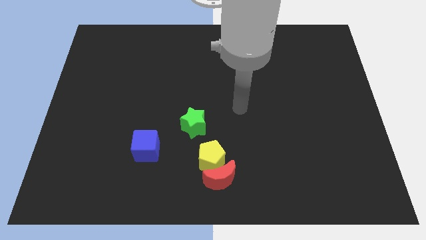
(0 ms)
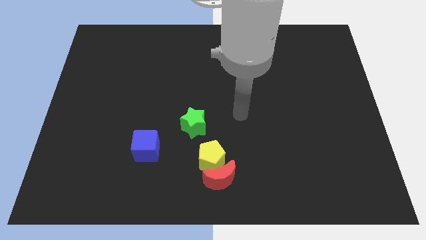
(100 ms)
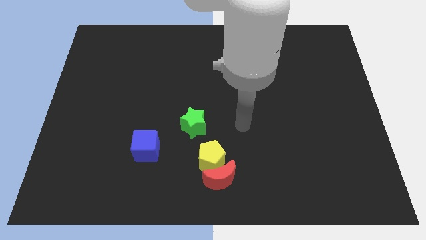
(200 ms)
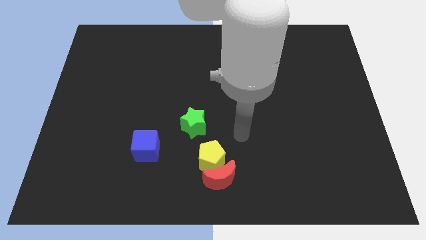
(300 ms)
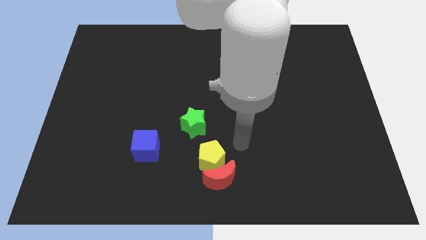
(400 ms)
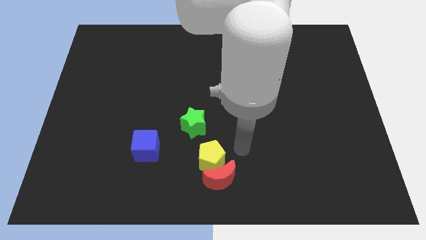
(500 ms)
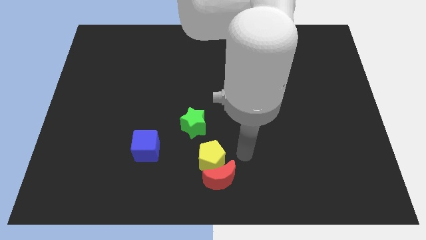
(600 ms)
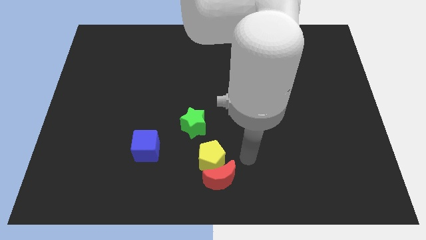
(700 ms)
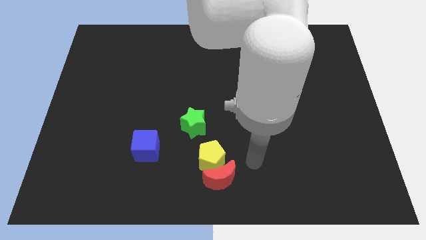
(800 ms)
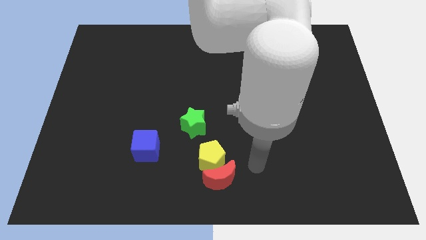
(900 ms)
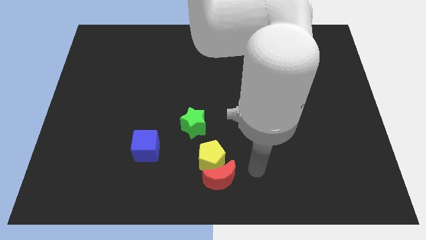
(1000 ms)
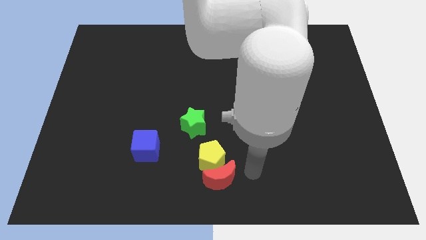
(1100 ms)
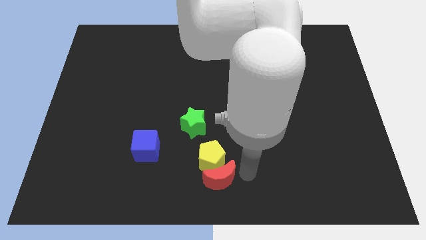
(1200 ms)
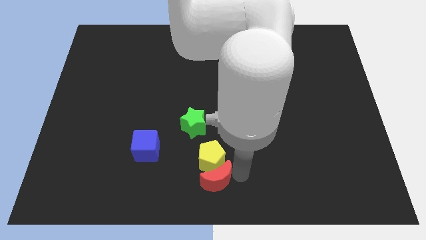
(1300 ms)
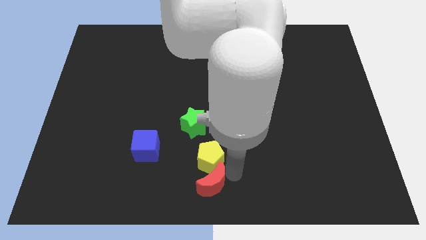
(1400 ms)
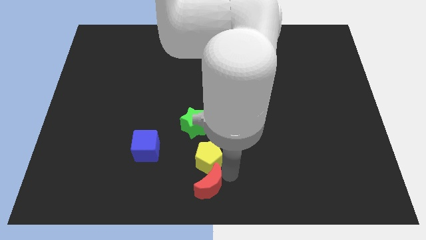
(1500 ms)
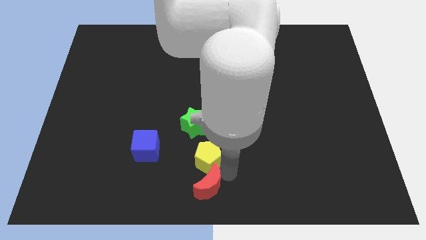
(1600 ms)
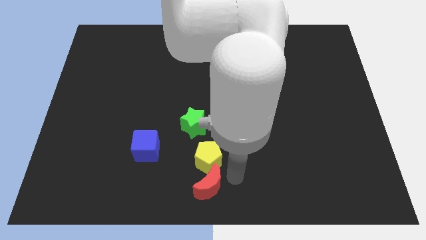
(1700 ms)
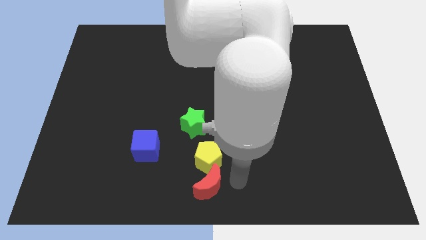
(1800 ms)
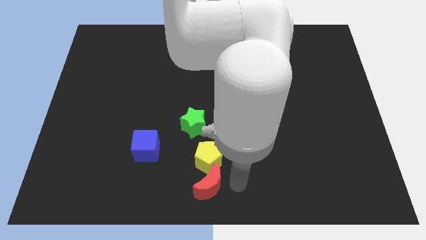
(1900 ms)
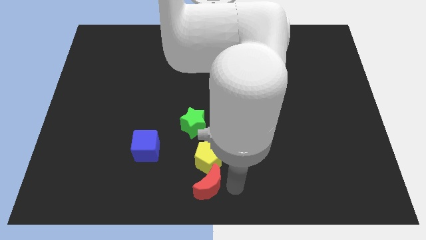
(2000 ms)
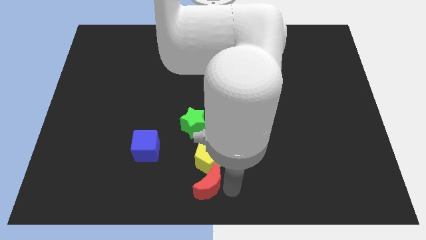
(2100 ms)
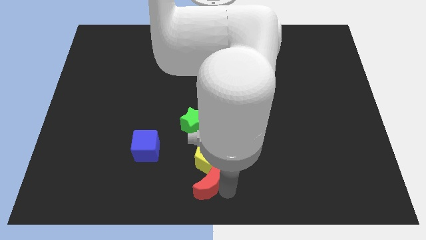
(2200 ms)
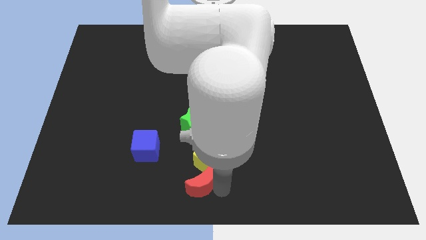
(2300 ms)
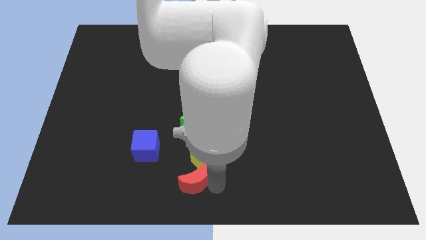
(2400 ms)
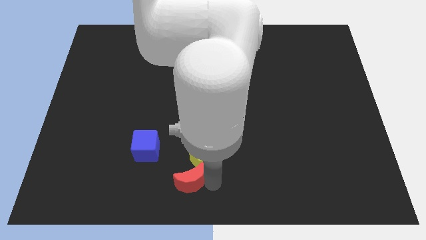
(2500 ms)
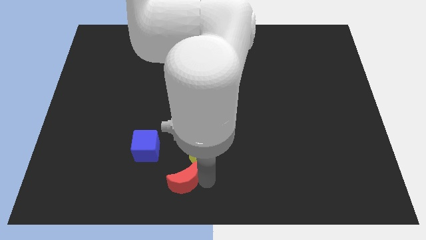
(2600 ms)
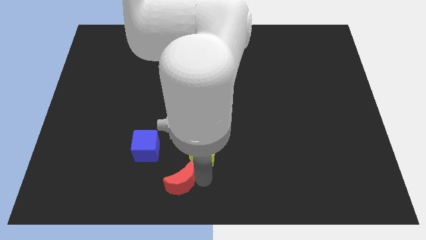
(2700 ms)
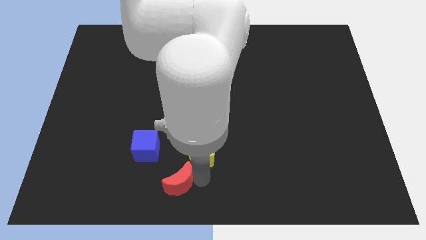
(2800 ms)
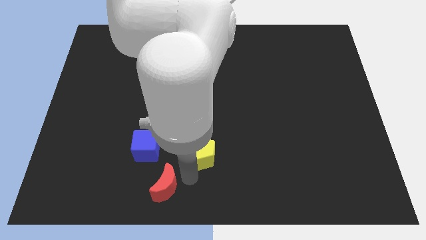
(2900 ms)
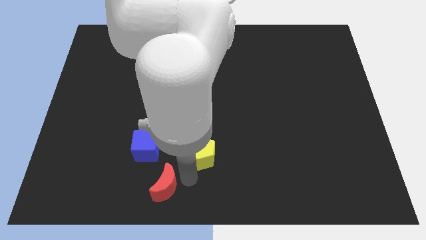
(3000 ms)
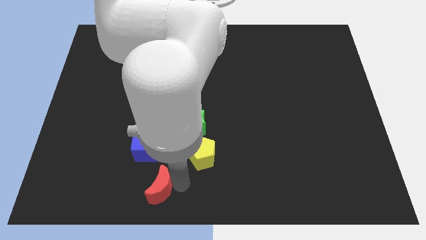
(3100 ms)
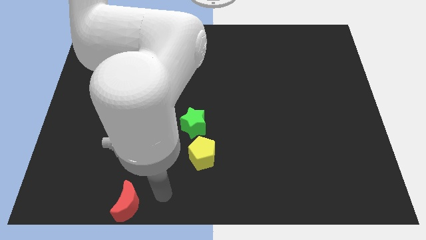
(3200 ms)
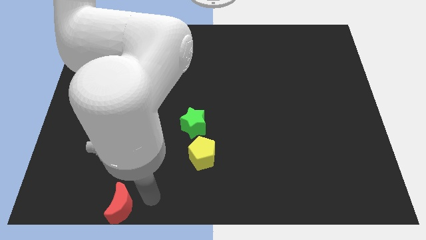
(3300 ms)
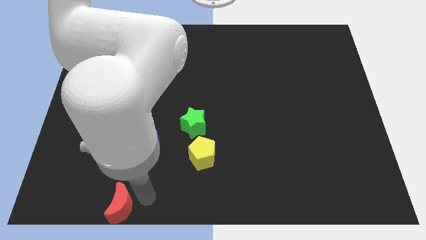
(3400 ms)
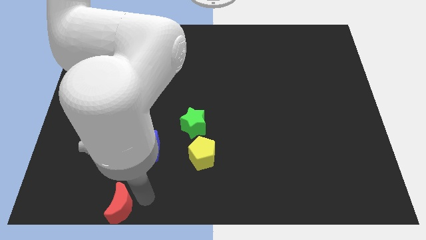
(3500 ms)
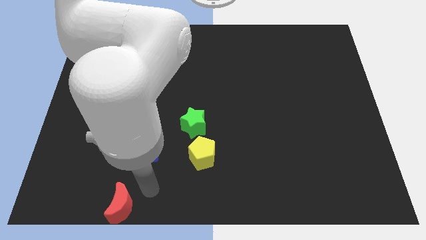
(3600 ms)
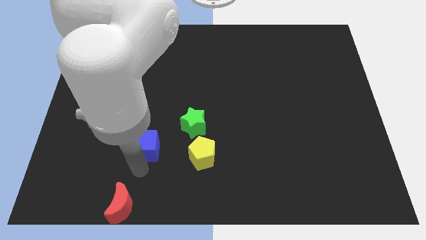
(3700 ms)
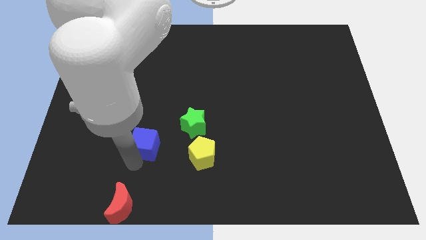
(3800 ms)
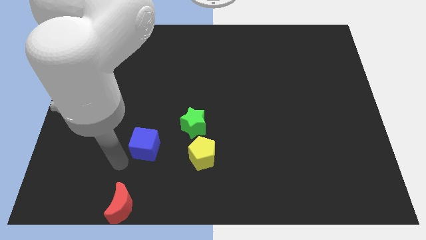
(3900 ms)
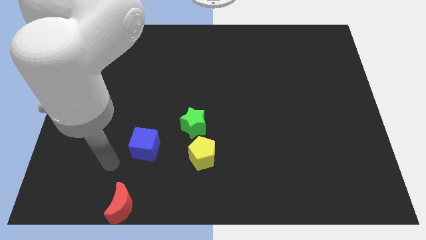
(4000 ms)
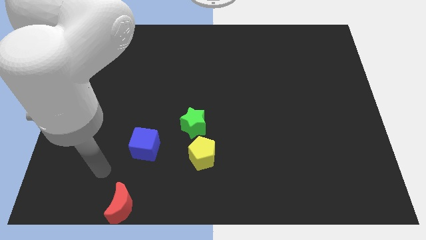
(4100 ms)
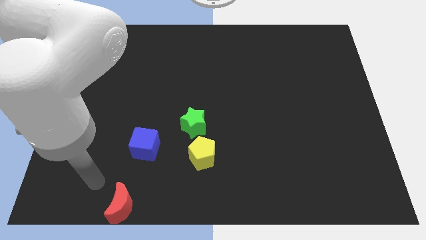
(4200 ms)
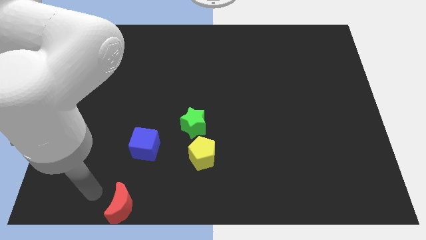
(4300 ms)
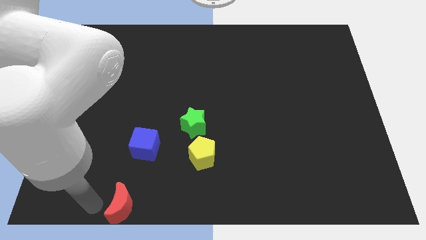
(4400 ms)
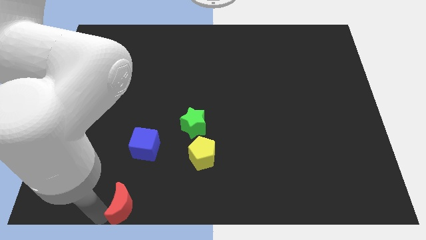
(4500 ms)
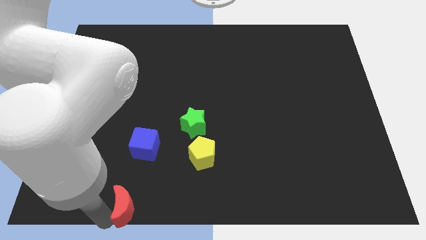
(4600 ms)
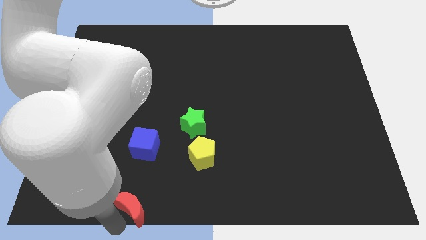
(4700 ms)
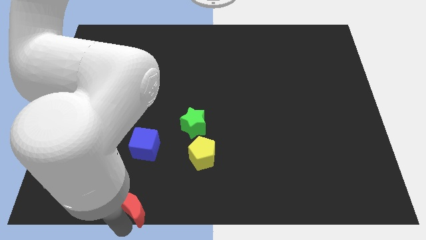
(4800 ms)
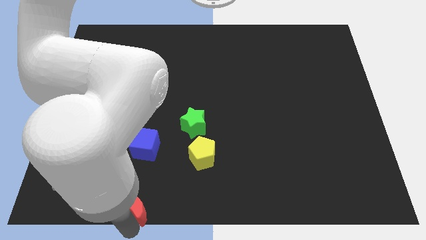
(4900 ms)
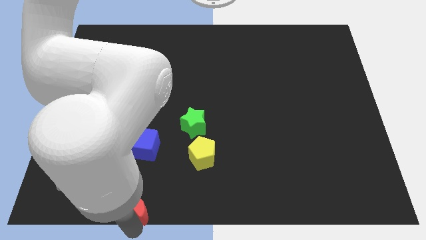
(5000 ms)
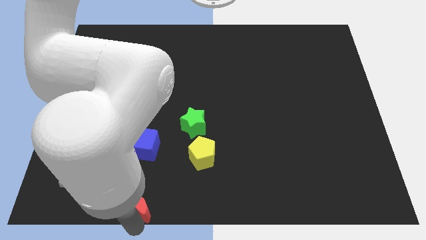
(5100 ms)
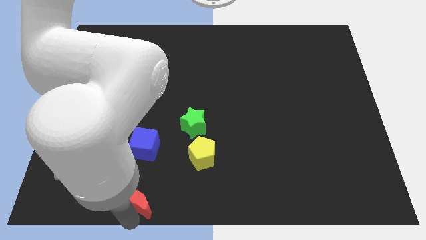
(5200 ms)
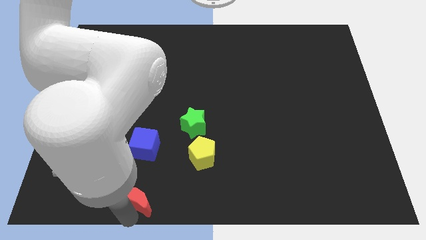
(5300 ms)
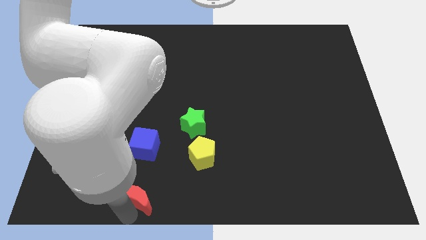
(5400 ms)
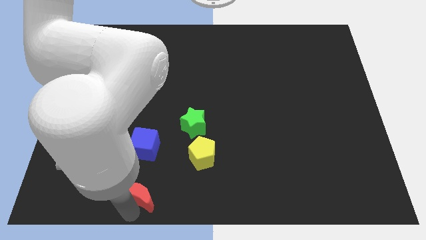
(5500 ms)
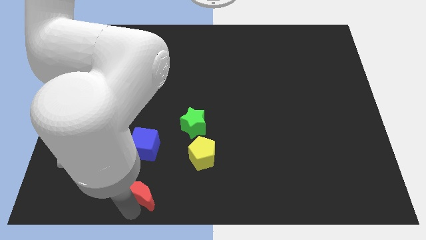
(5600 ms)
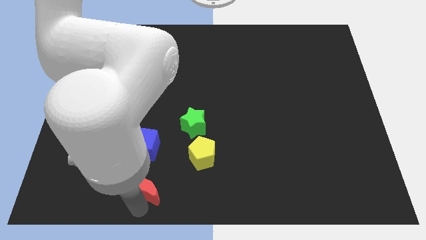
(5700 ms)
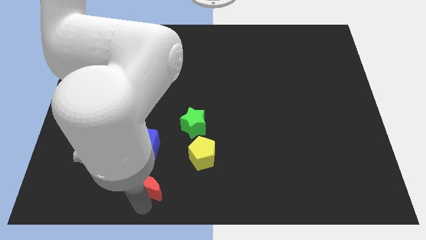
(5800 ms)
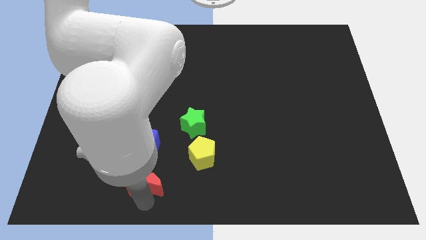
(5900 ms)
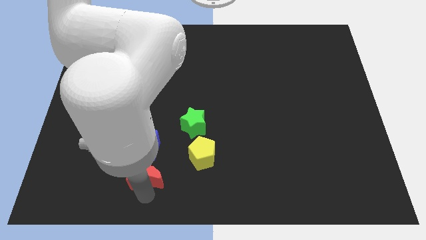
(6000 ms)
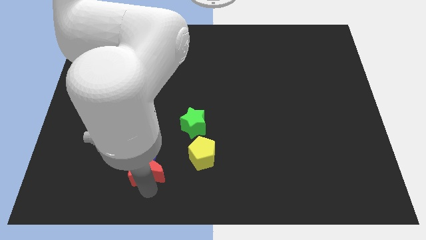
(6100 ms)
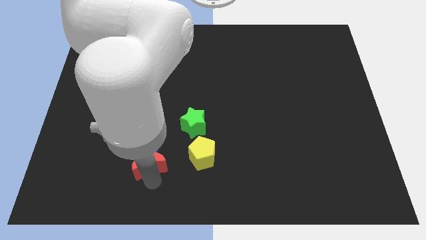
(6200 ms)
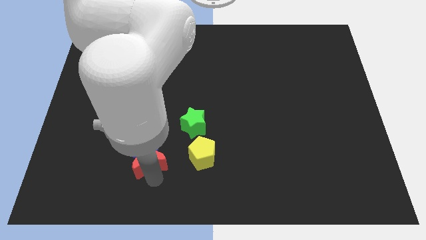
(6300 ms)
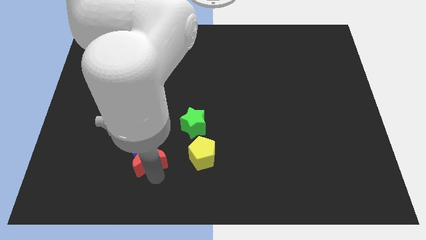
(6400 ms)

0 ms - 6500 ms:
slide the red moon to the blue block

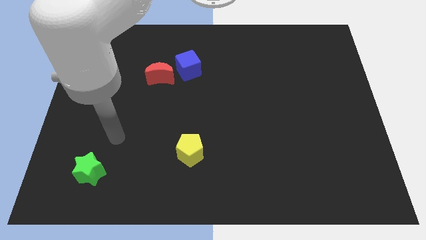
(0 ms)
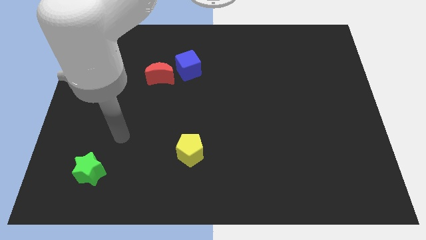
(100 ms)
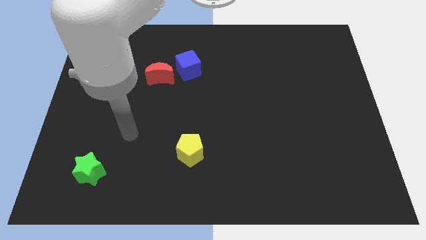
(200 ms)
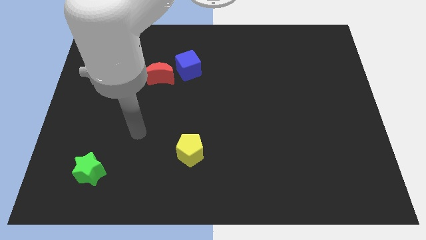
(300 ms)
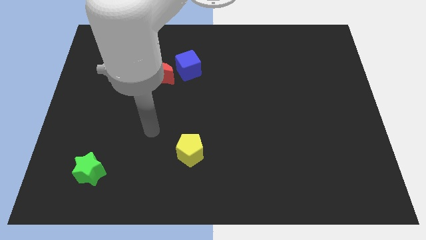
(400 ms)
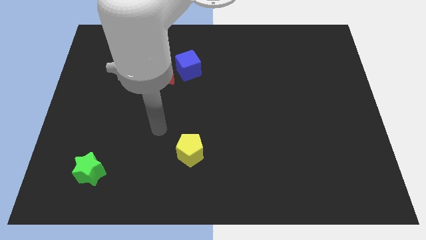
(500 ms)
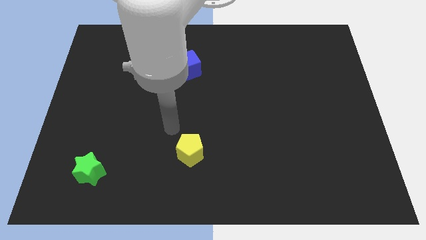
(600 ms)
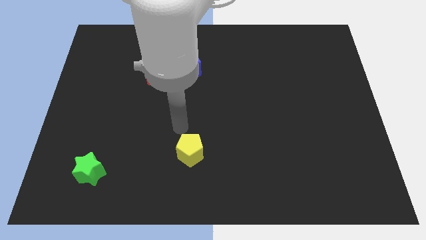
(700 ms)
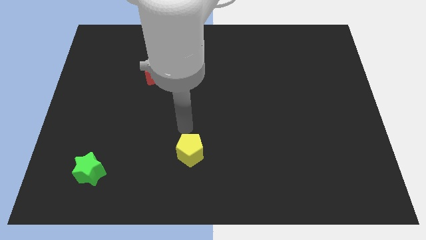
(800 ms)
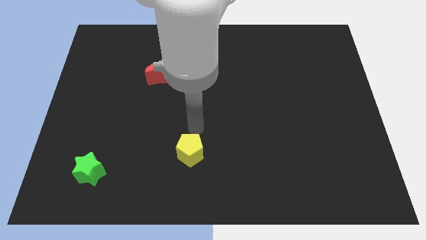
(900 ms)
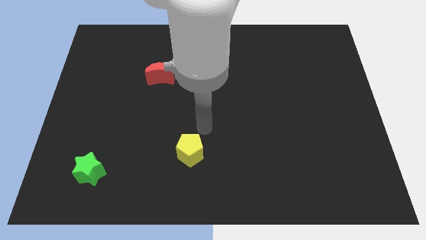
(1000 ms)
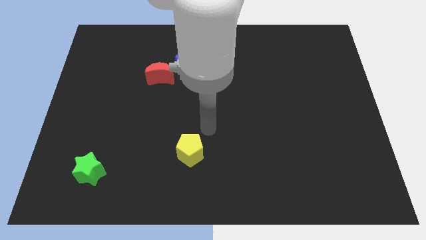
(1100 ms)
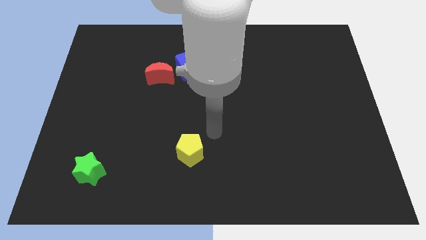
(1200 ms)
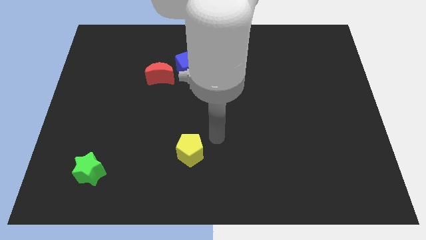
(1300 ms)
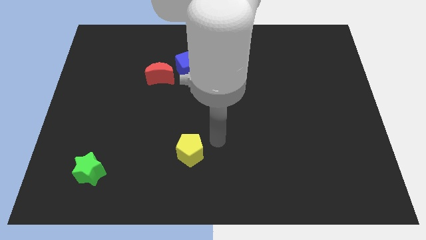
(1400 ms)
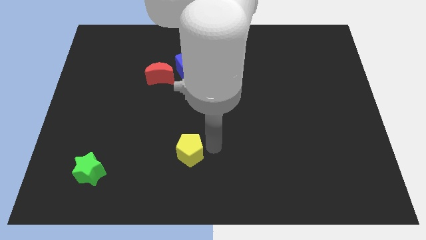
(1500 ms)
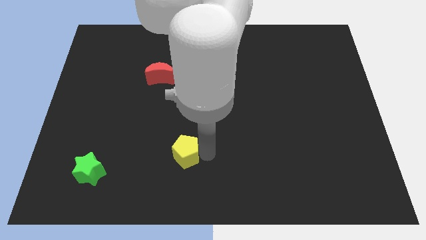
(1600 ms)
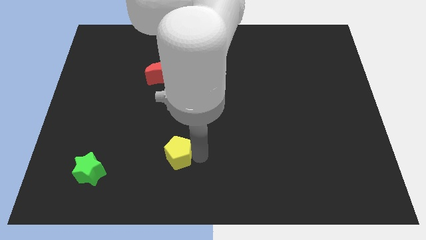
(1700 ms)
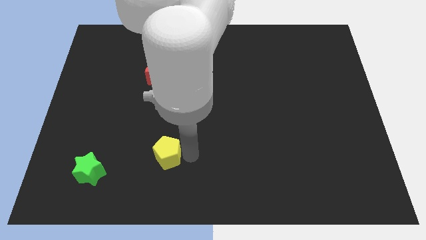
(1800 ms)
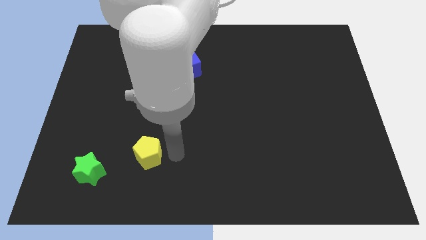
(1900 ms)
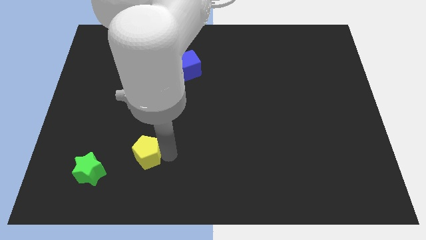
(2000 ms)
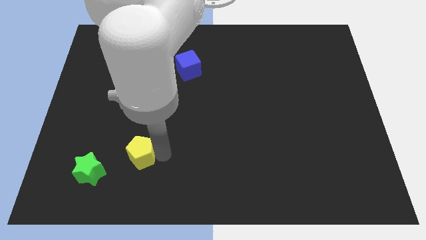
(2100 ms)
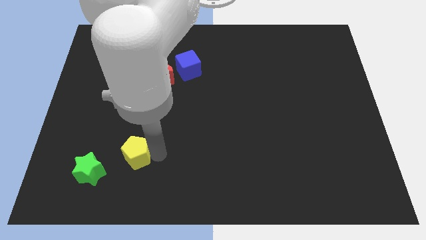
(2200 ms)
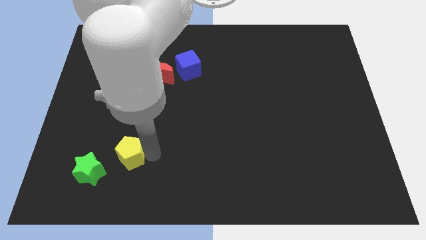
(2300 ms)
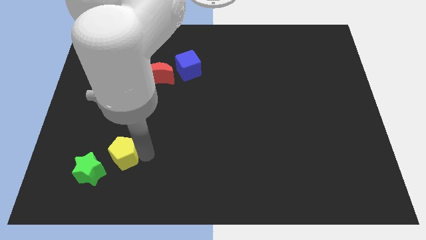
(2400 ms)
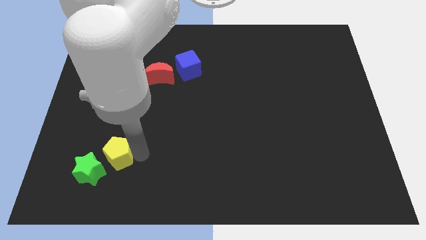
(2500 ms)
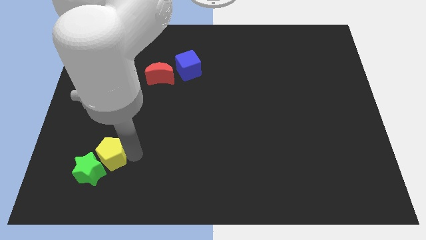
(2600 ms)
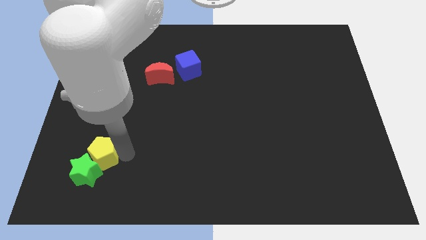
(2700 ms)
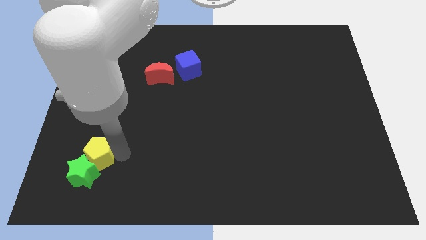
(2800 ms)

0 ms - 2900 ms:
slide the yellow pentagon next to the star
